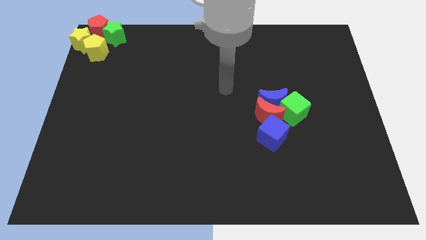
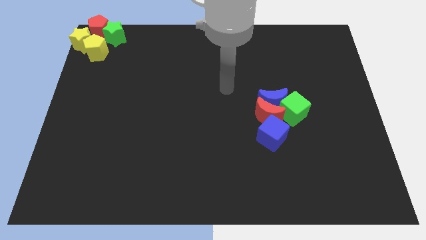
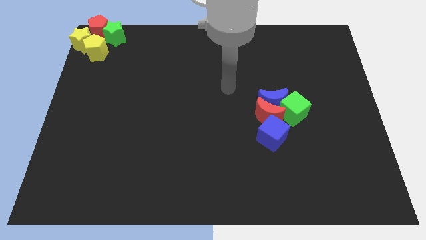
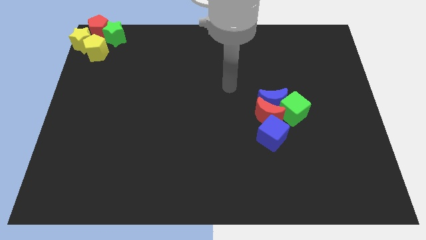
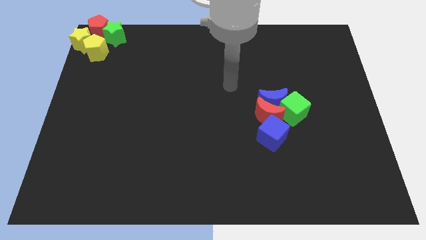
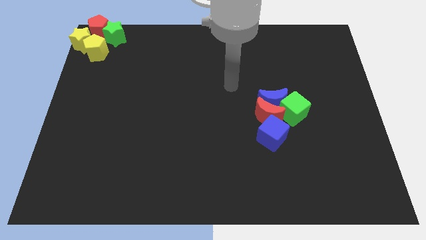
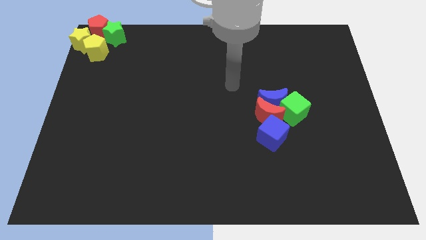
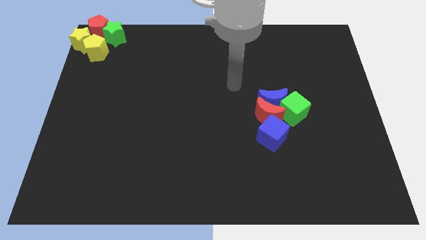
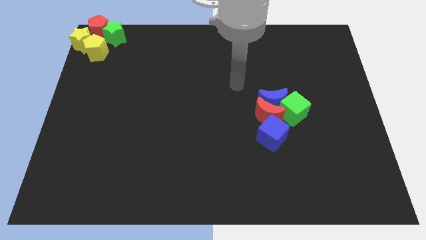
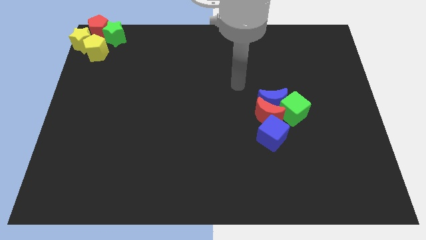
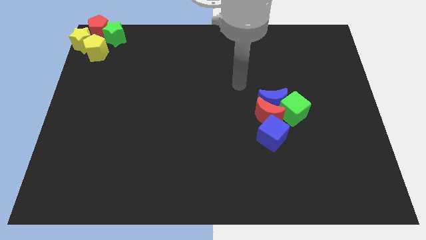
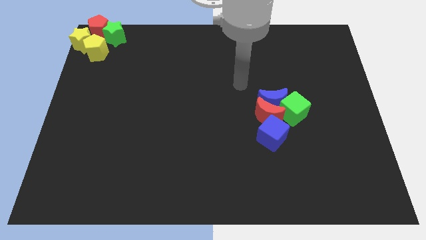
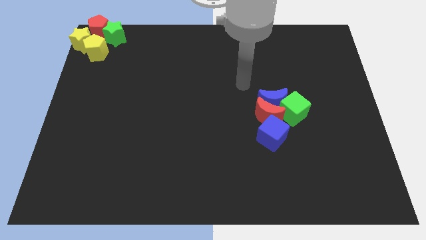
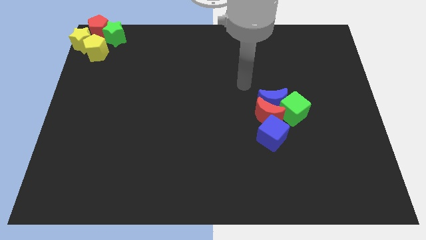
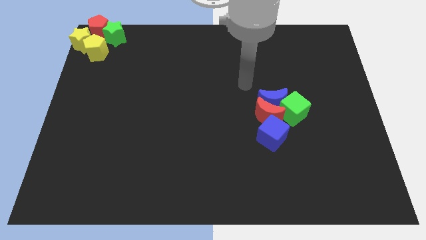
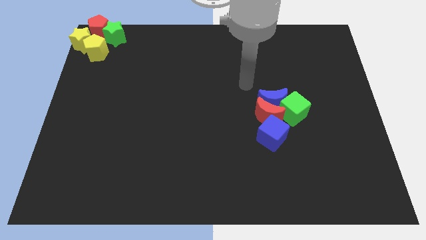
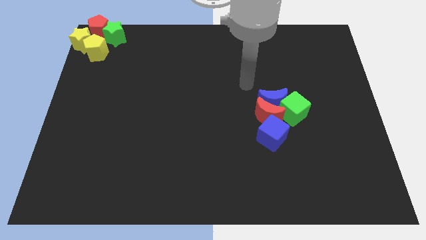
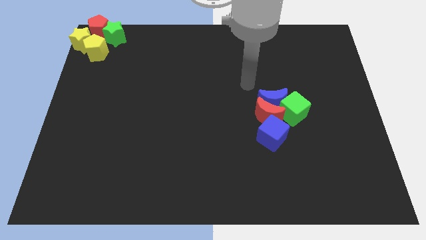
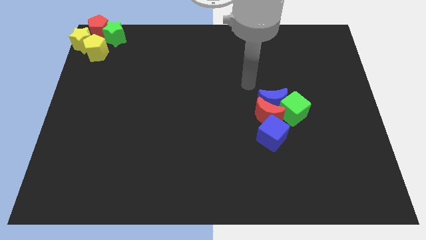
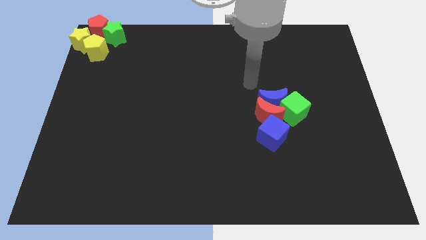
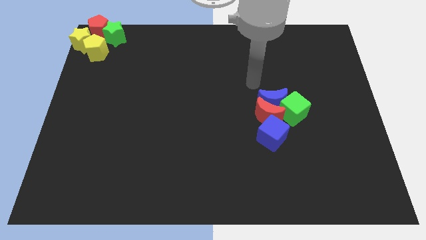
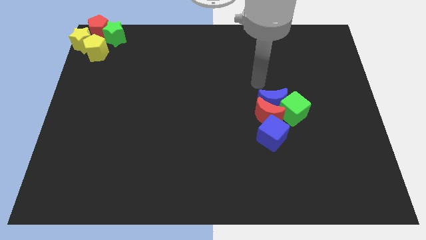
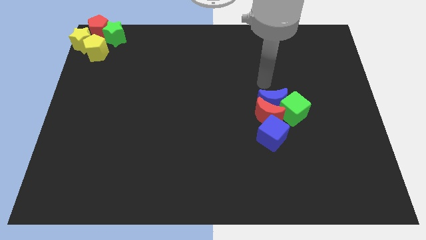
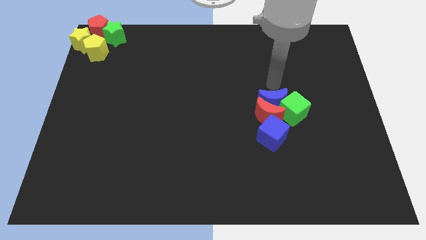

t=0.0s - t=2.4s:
move your arm towards the top of the blue crescent

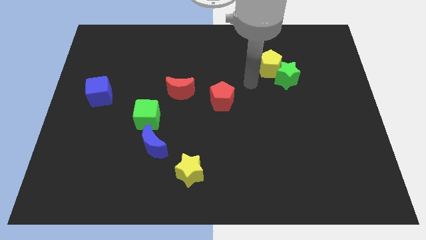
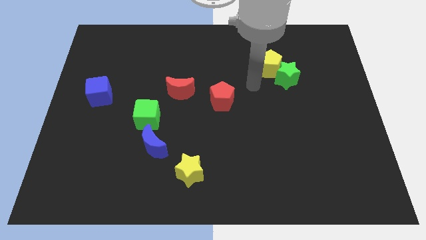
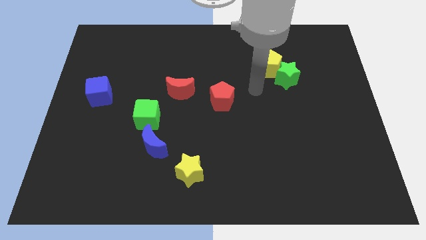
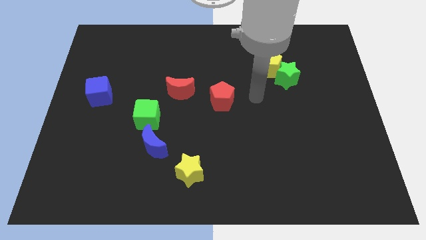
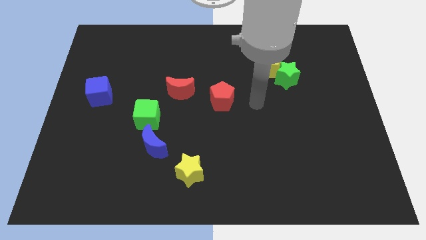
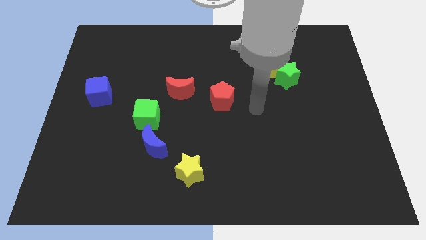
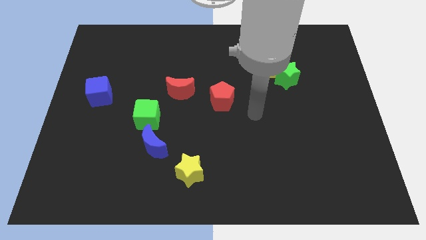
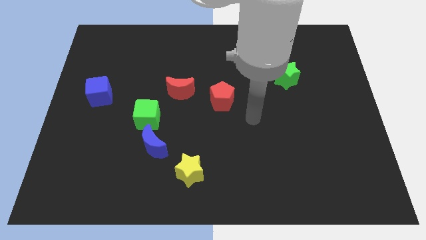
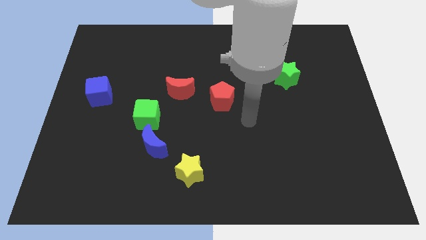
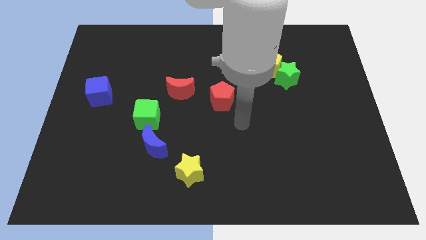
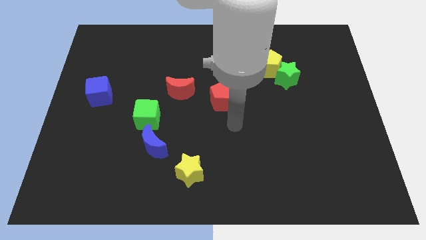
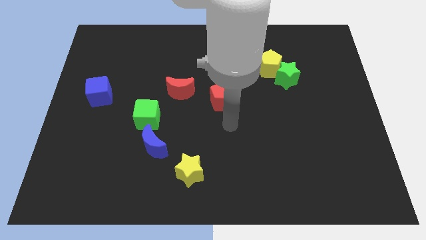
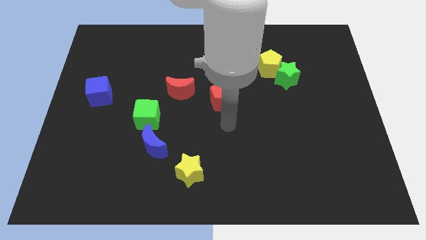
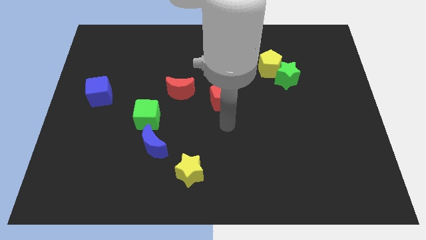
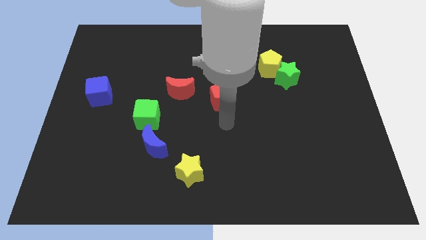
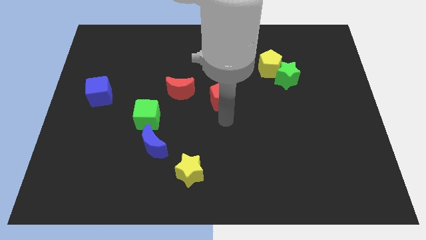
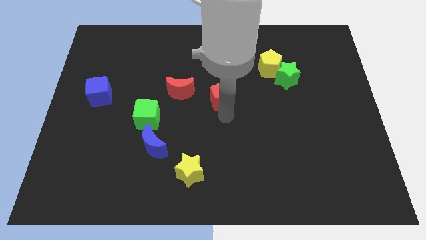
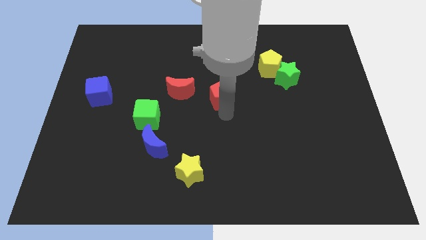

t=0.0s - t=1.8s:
move your arm to the bottom of red pentagon

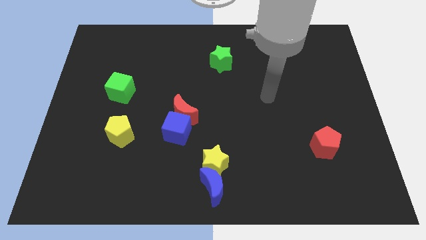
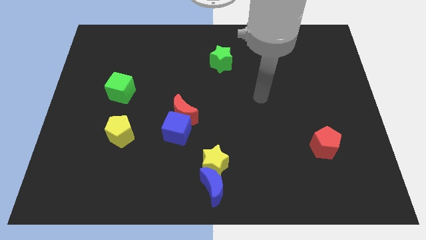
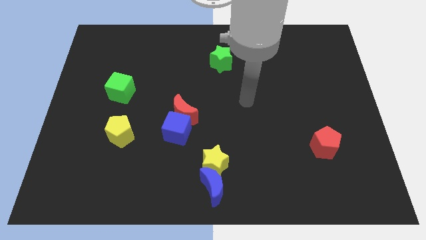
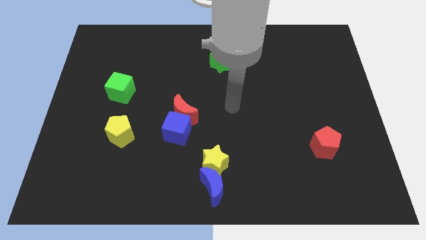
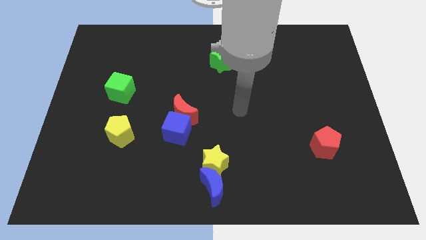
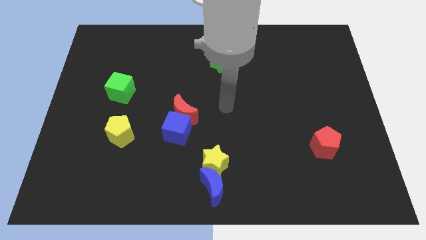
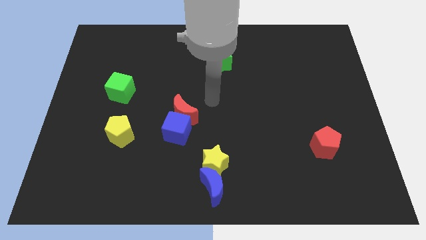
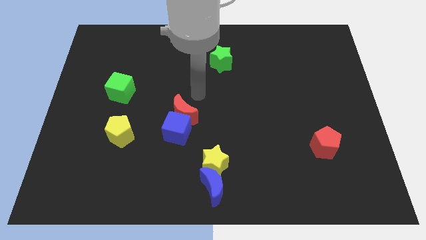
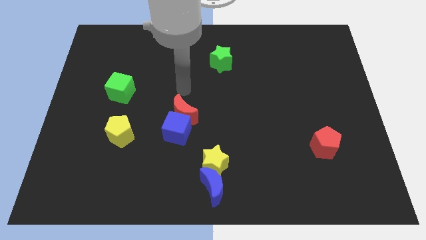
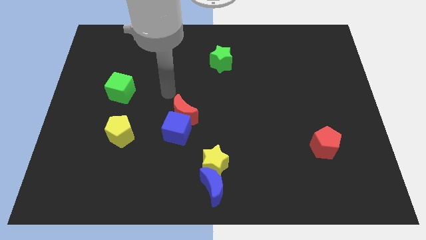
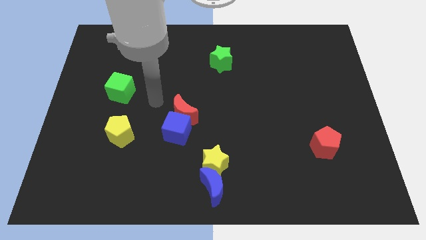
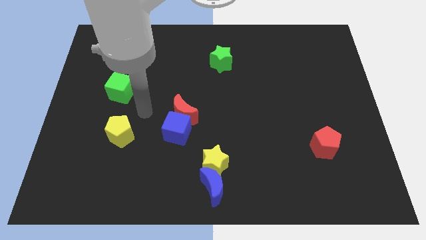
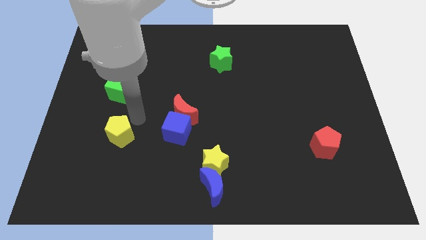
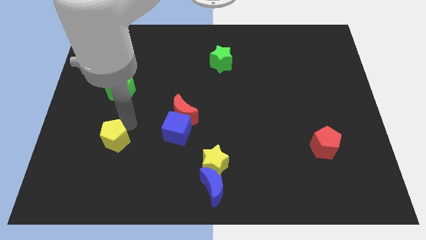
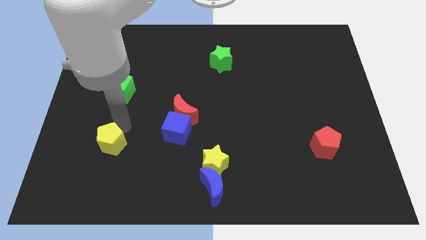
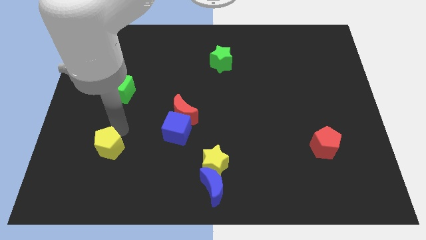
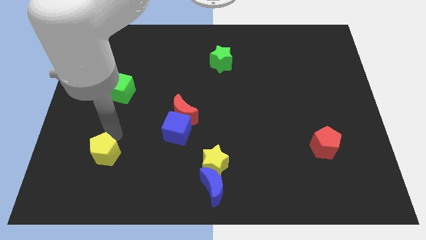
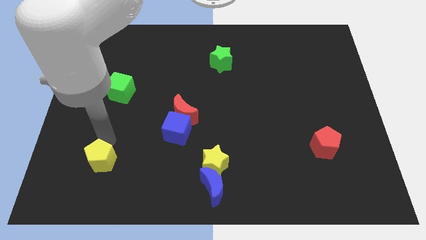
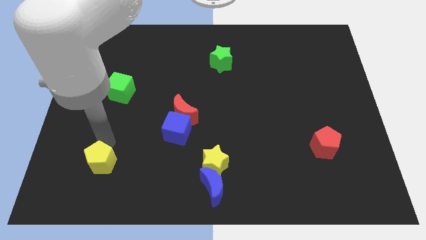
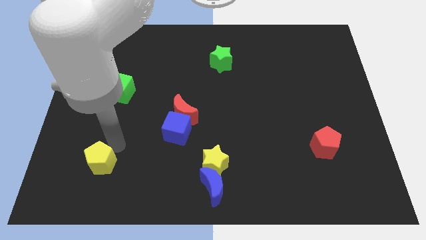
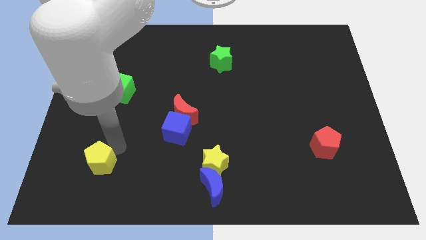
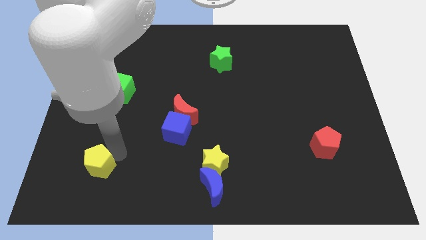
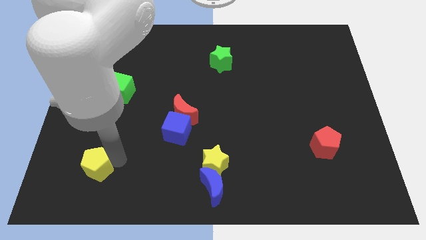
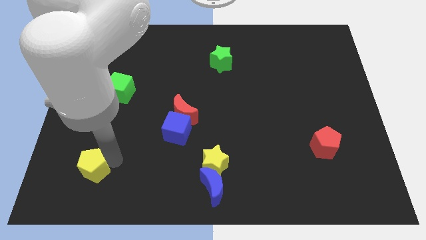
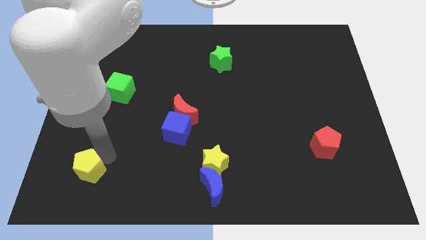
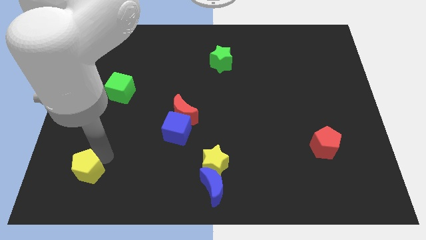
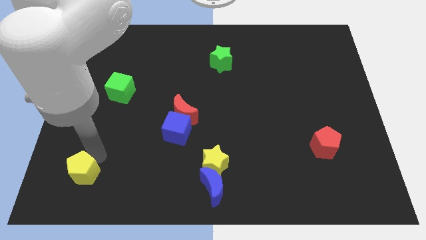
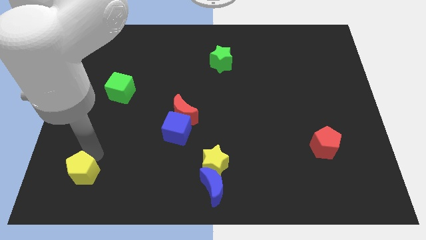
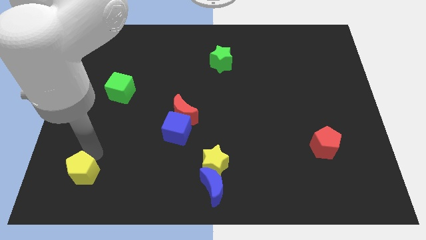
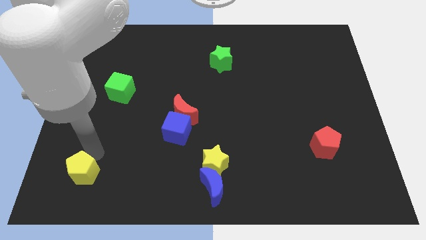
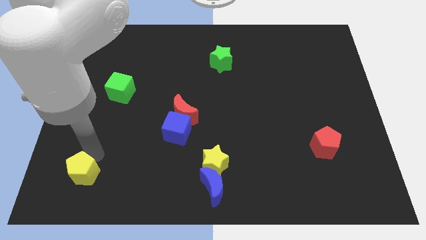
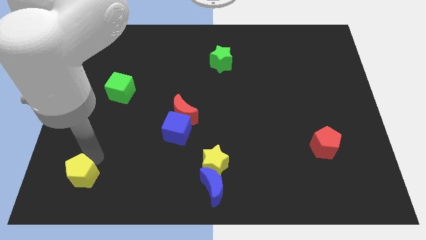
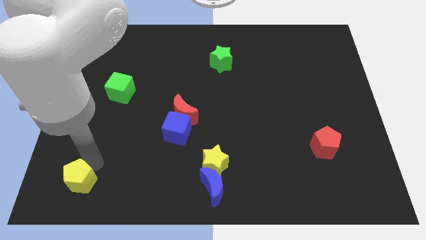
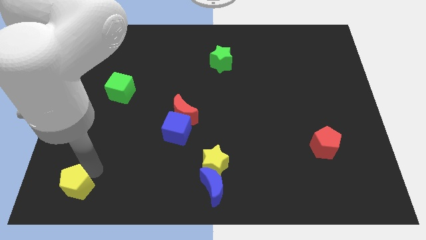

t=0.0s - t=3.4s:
place the yellow pentagon to the left of the blue crescent

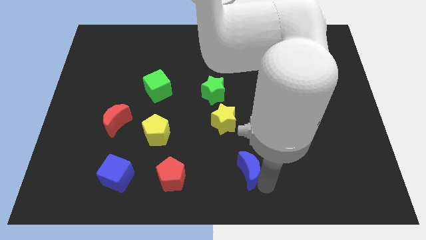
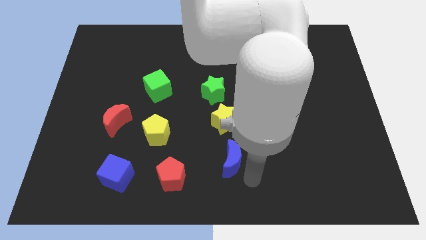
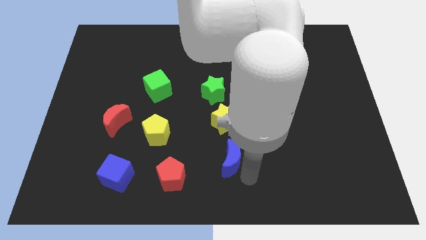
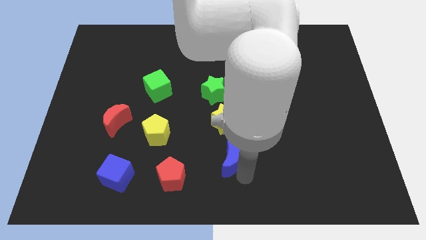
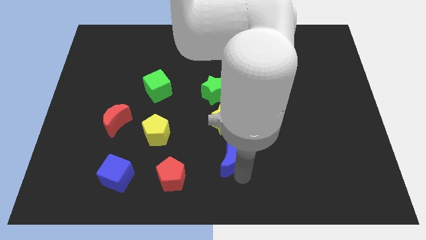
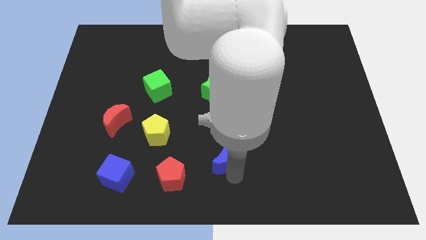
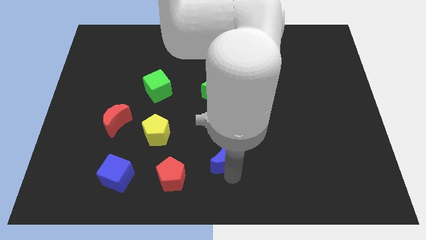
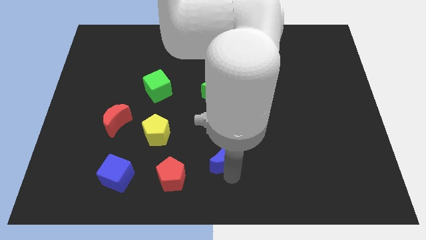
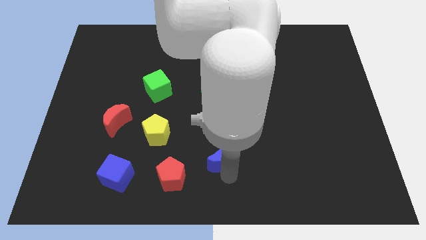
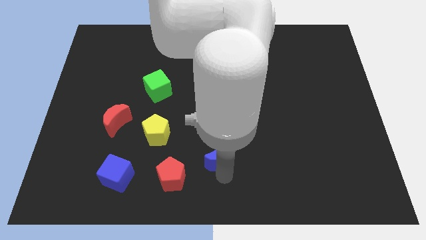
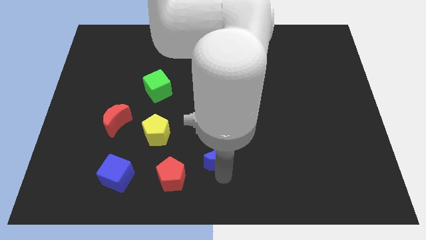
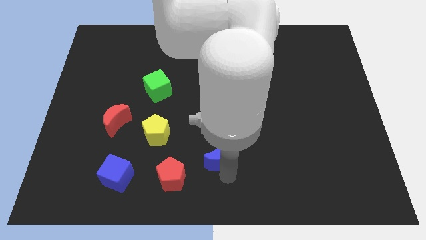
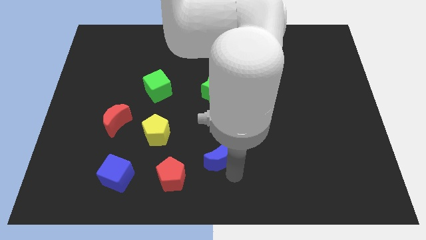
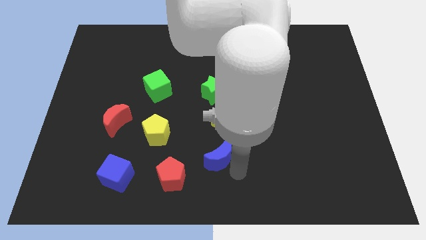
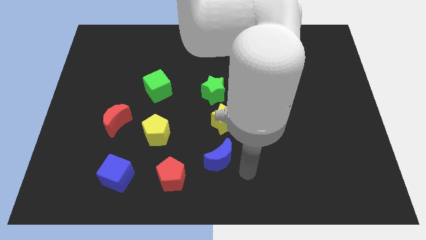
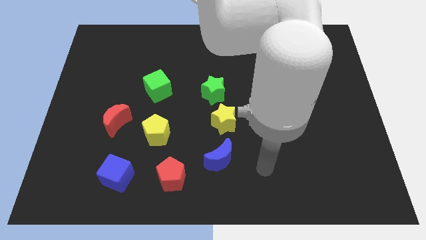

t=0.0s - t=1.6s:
push the blue crescent to the bottom of the yellow star
